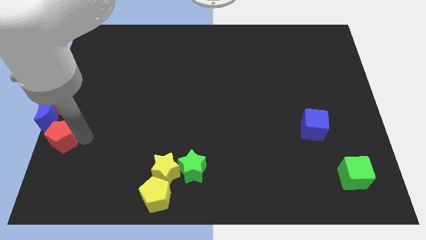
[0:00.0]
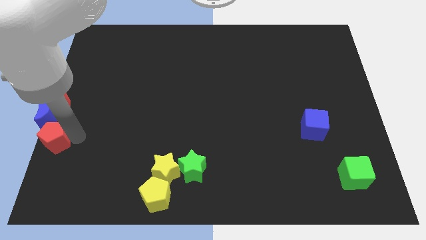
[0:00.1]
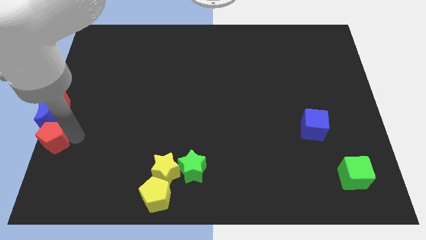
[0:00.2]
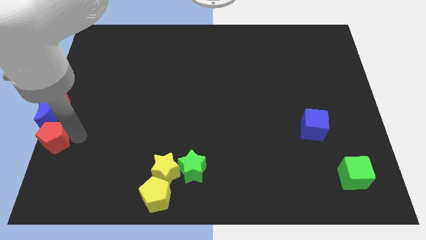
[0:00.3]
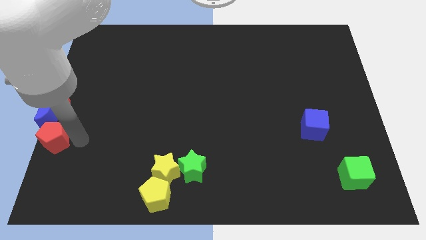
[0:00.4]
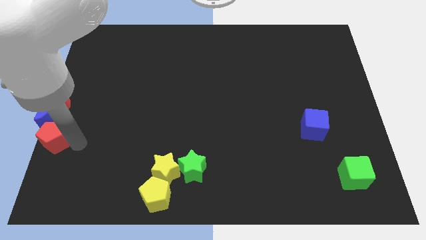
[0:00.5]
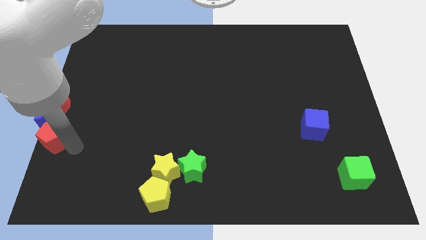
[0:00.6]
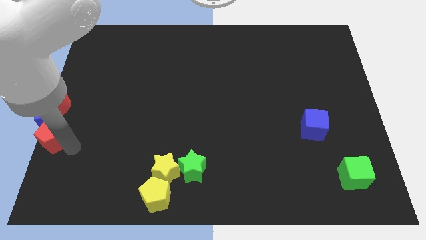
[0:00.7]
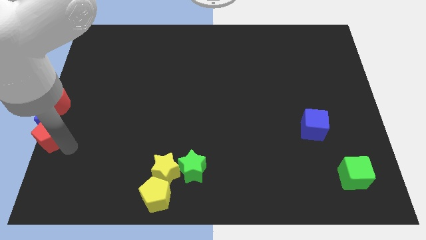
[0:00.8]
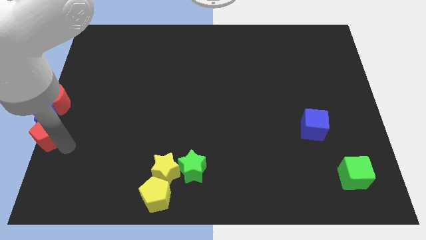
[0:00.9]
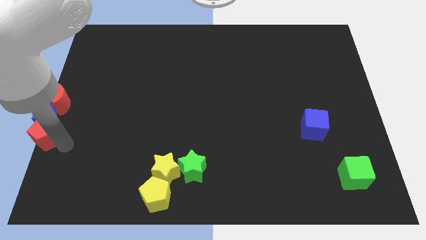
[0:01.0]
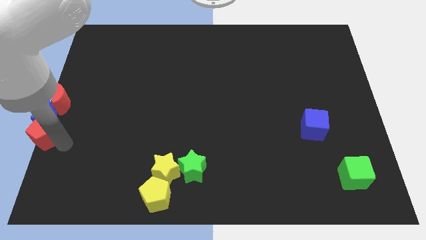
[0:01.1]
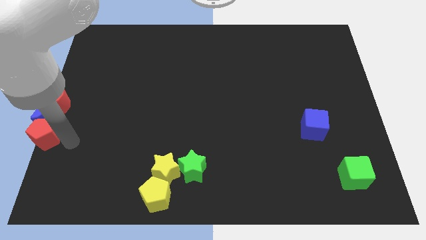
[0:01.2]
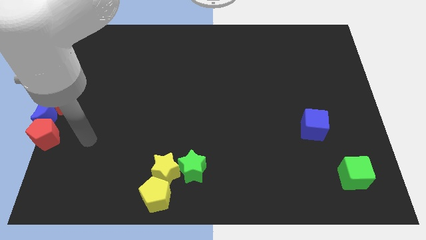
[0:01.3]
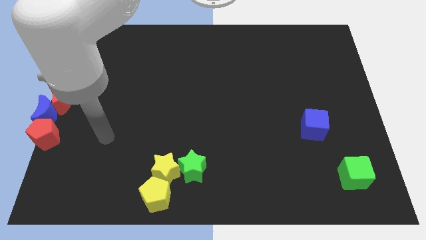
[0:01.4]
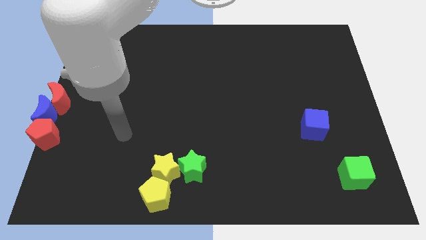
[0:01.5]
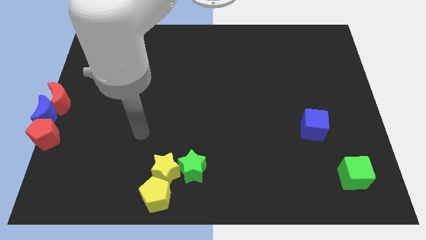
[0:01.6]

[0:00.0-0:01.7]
place the red pentagon bottom the blue crescent

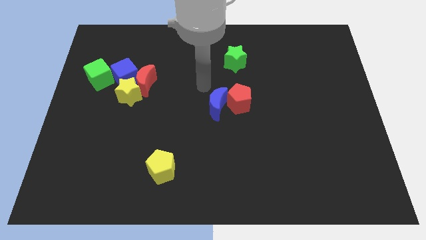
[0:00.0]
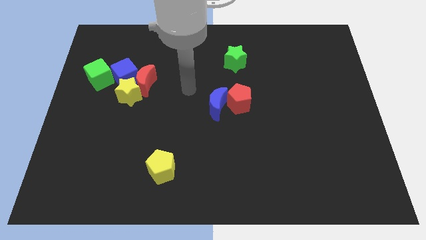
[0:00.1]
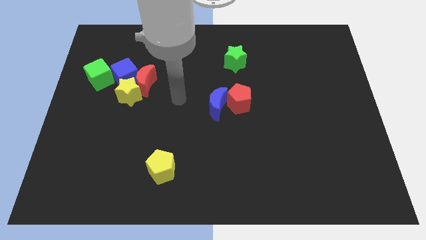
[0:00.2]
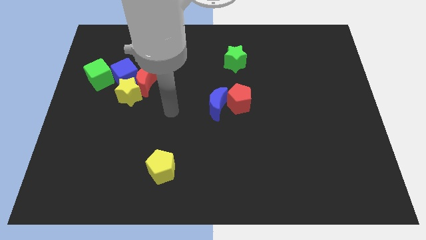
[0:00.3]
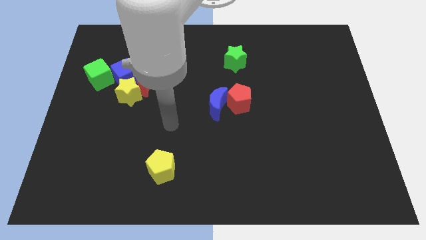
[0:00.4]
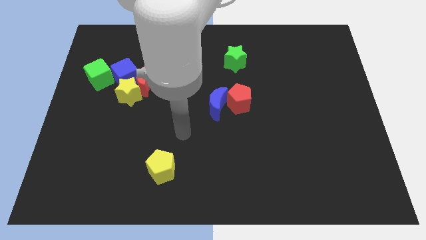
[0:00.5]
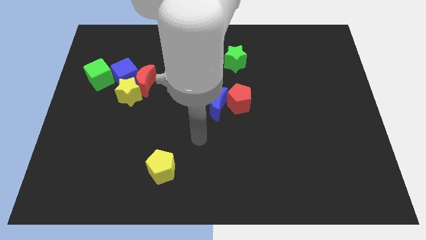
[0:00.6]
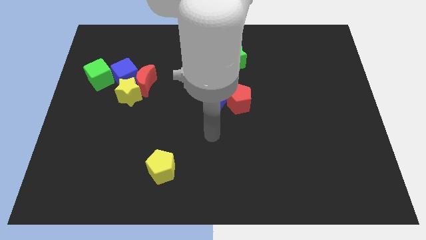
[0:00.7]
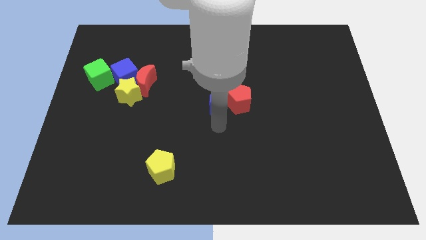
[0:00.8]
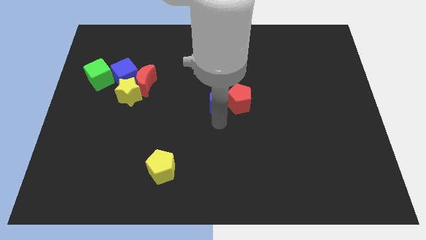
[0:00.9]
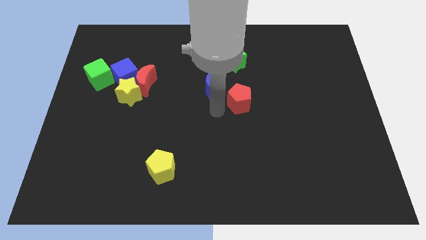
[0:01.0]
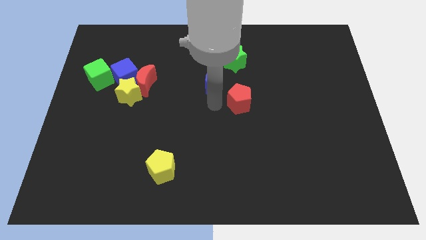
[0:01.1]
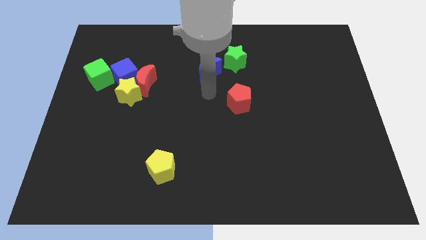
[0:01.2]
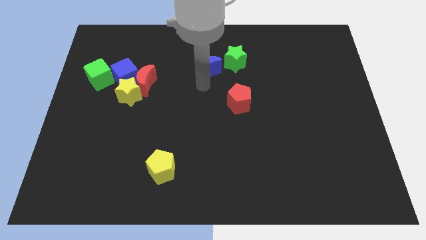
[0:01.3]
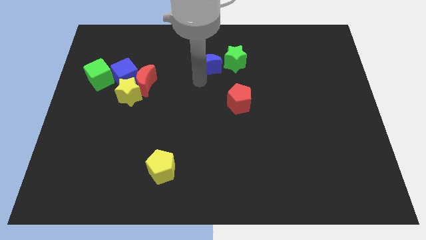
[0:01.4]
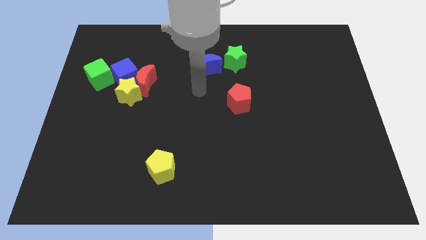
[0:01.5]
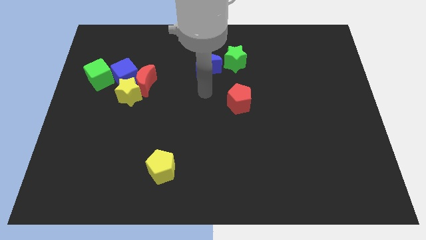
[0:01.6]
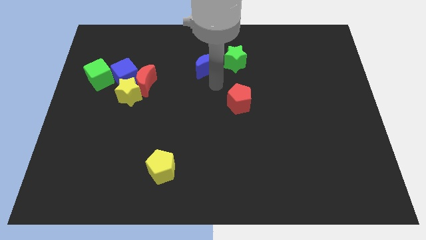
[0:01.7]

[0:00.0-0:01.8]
move the blue moon to the left of the green star

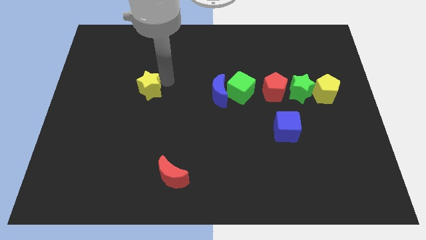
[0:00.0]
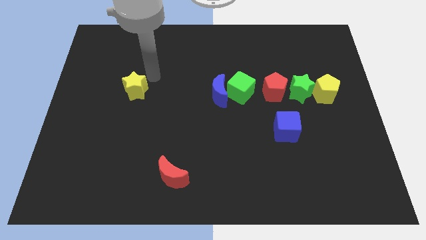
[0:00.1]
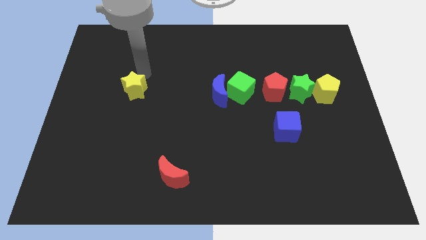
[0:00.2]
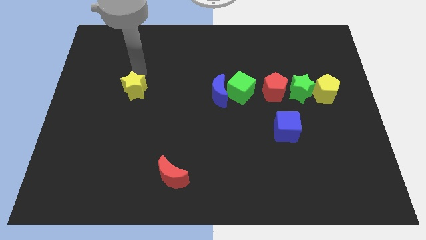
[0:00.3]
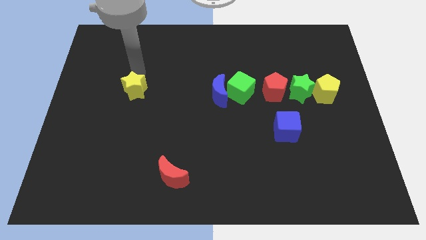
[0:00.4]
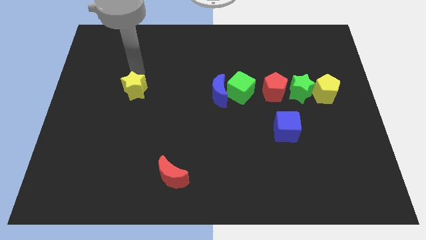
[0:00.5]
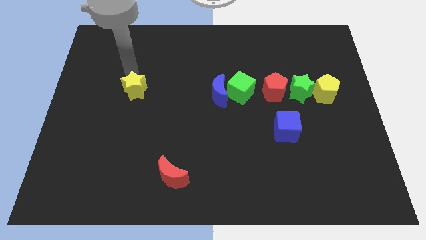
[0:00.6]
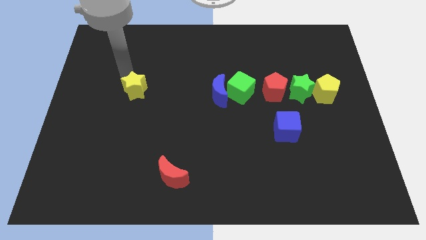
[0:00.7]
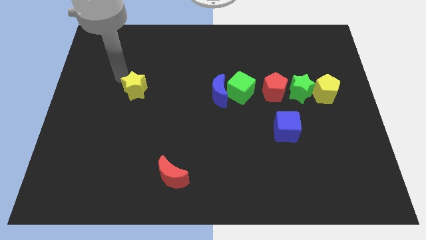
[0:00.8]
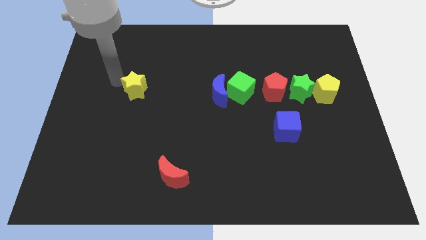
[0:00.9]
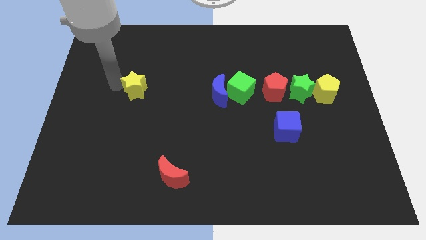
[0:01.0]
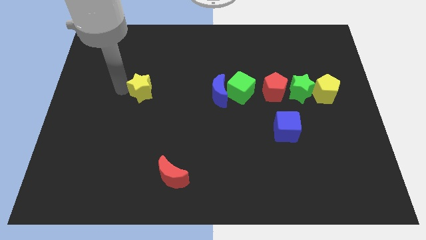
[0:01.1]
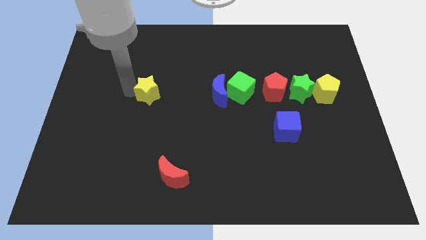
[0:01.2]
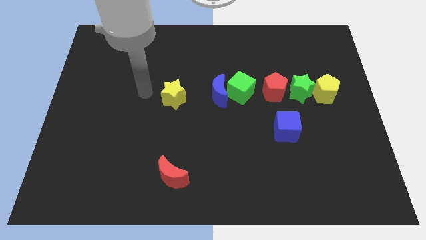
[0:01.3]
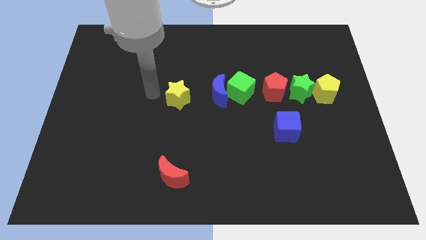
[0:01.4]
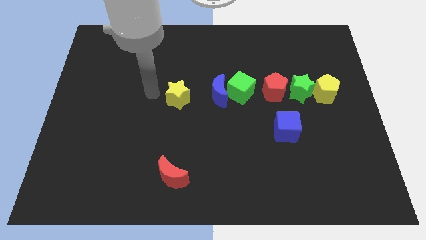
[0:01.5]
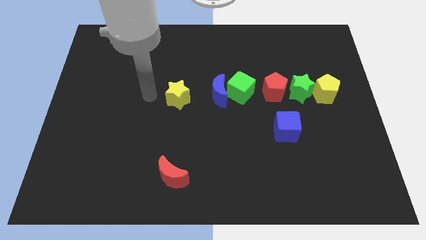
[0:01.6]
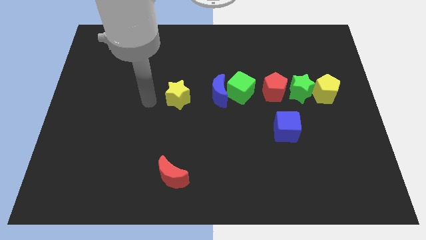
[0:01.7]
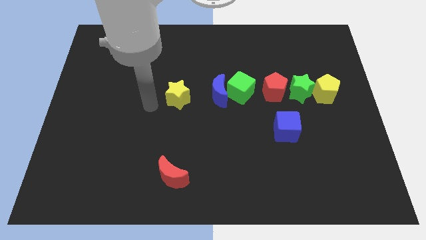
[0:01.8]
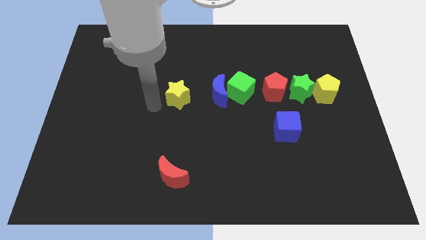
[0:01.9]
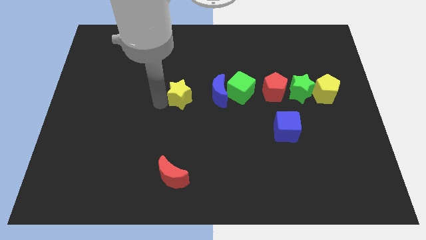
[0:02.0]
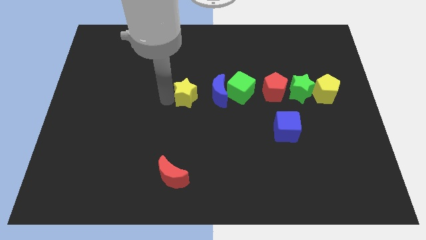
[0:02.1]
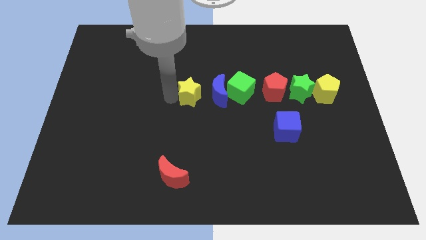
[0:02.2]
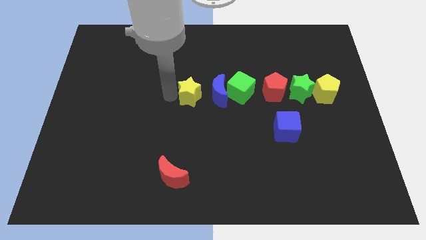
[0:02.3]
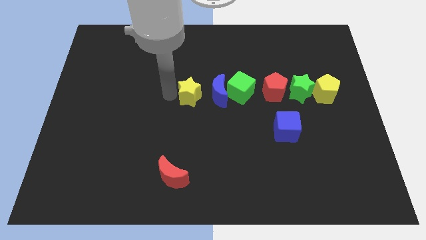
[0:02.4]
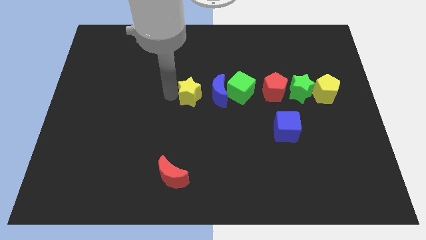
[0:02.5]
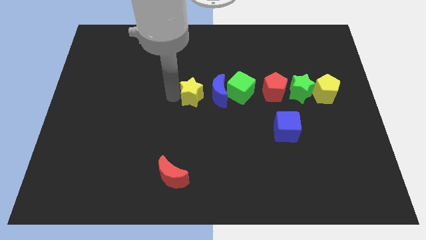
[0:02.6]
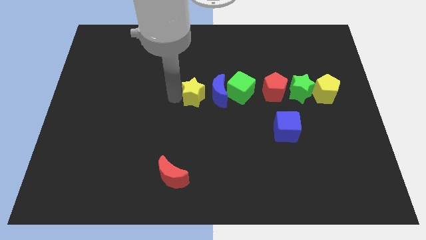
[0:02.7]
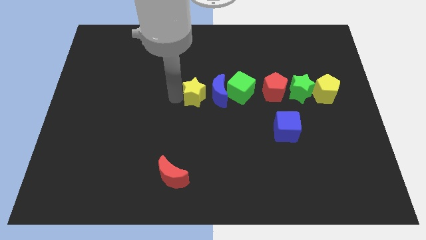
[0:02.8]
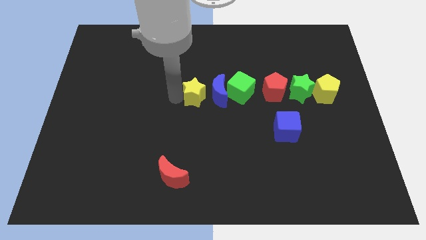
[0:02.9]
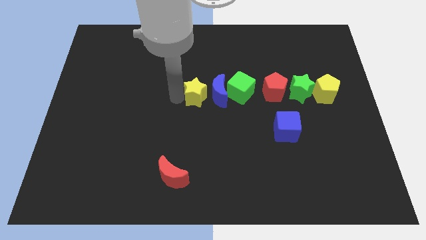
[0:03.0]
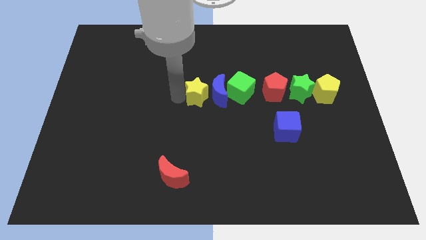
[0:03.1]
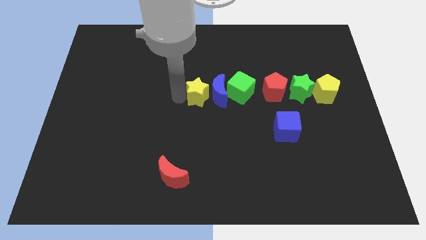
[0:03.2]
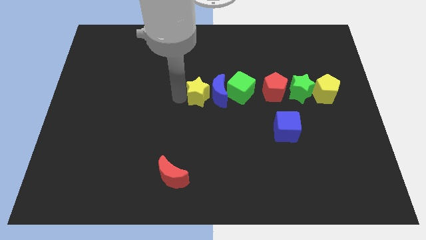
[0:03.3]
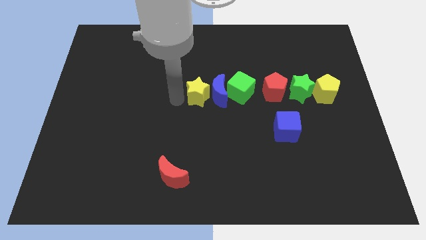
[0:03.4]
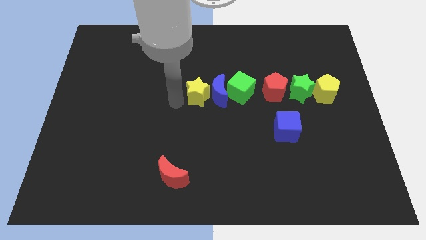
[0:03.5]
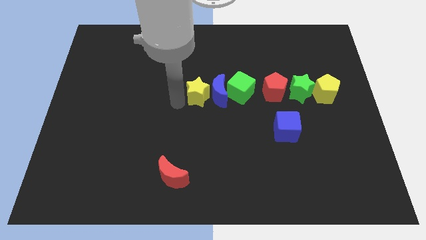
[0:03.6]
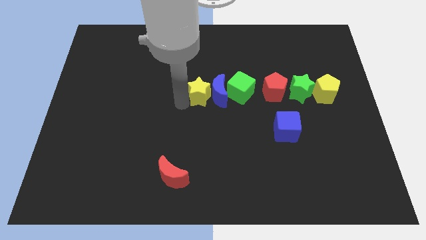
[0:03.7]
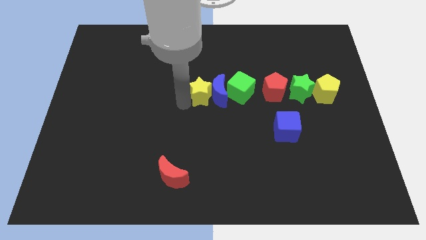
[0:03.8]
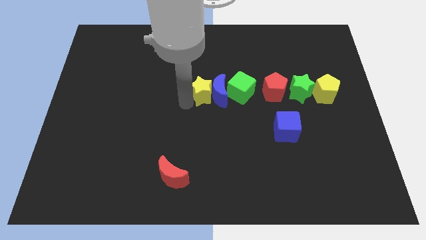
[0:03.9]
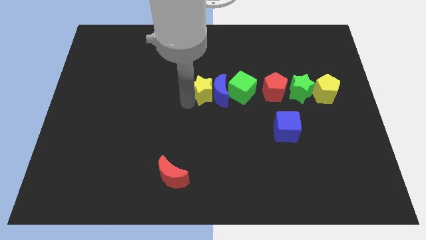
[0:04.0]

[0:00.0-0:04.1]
place the yellow star into the blue crescent

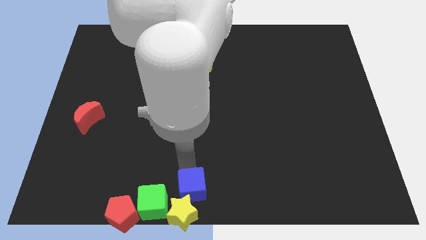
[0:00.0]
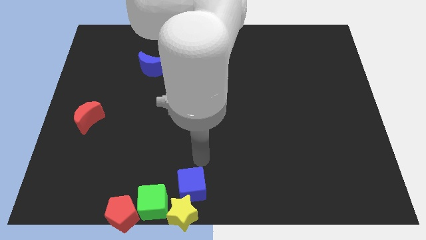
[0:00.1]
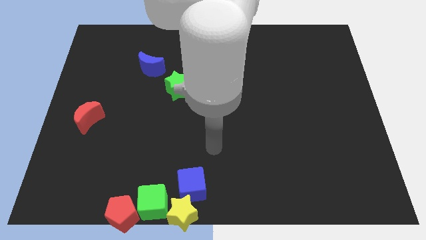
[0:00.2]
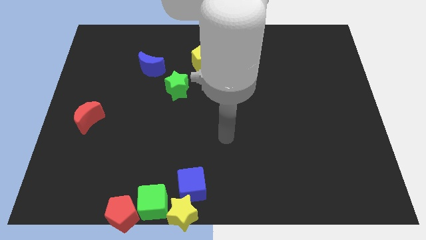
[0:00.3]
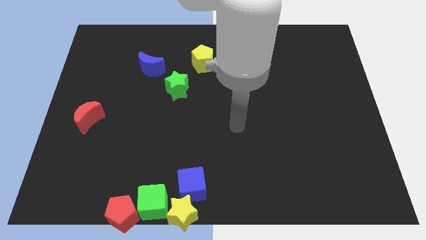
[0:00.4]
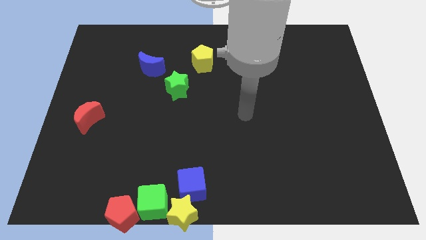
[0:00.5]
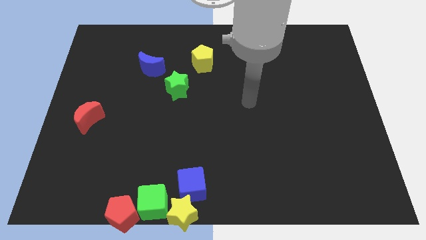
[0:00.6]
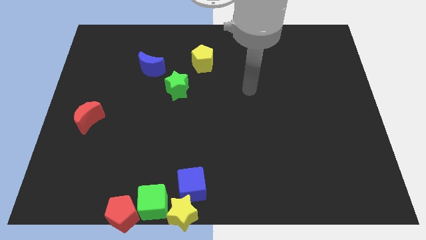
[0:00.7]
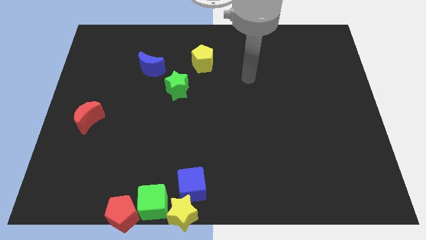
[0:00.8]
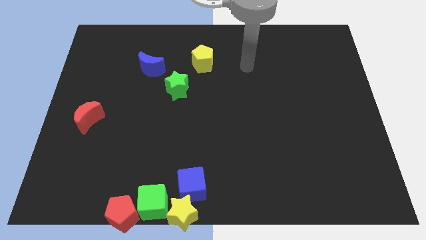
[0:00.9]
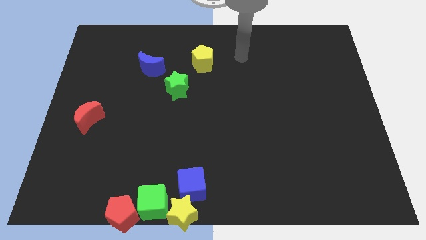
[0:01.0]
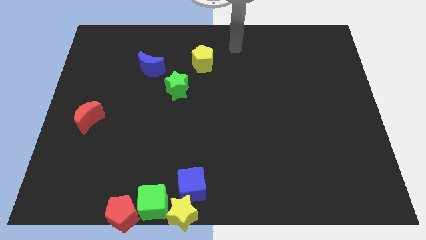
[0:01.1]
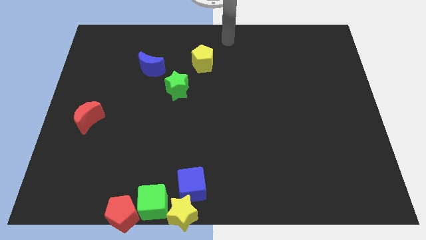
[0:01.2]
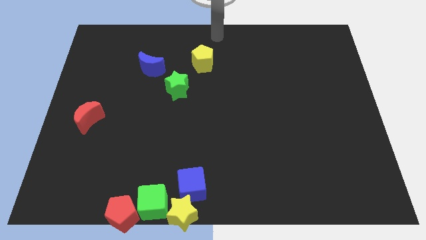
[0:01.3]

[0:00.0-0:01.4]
move your hand to the top of the board
